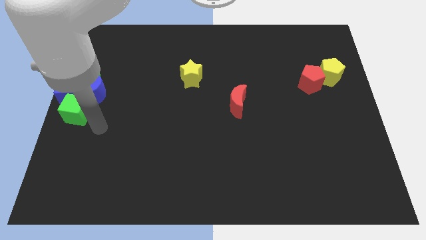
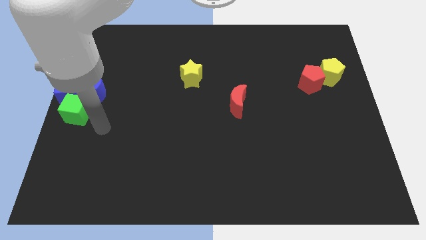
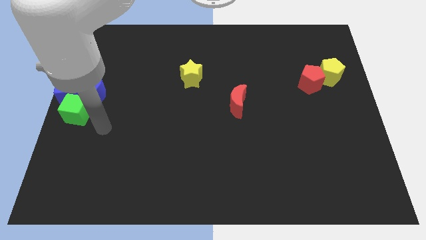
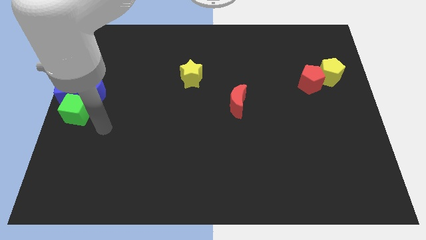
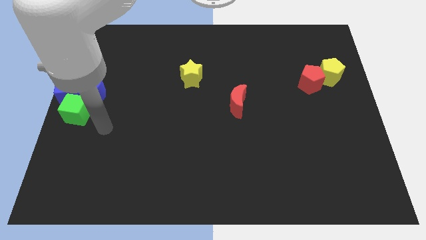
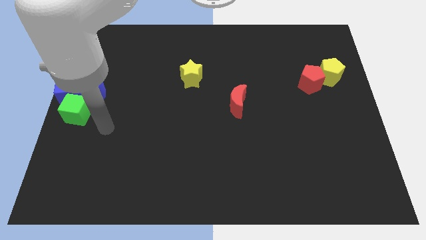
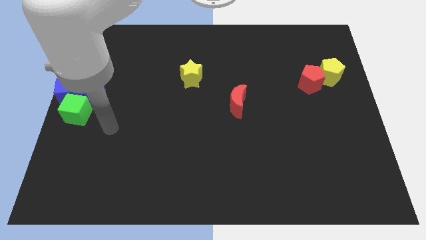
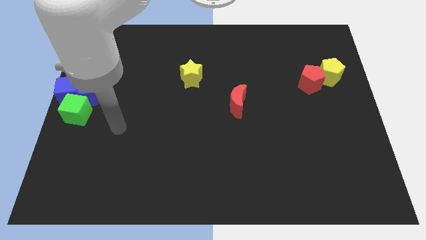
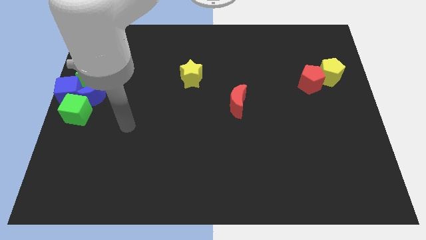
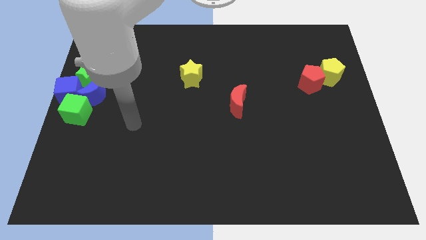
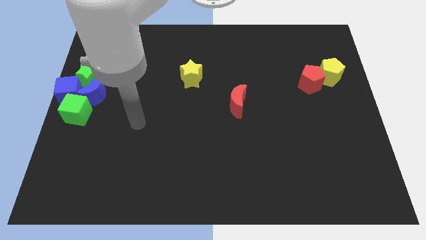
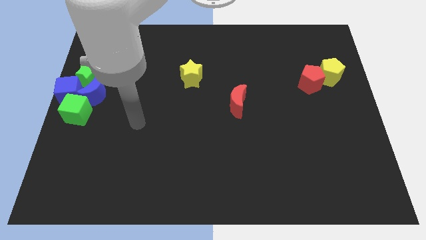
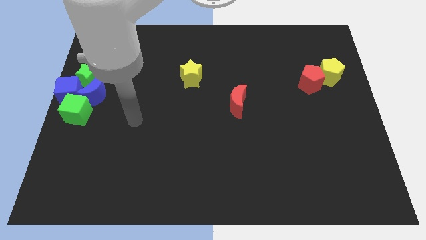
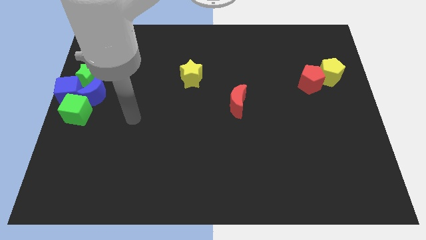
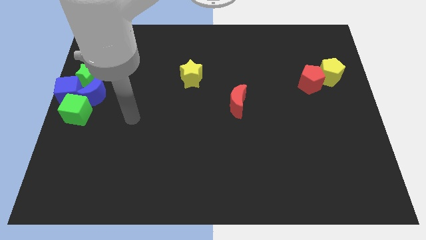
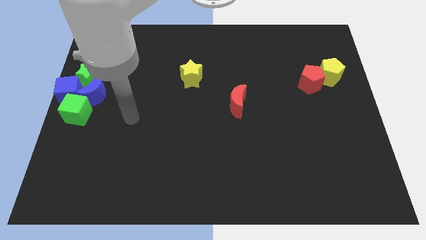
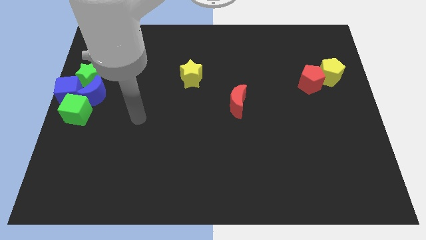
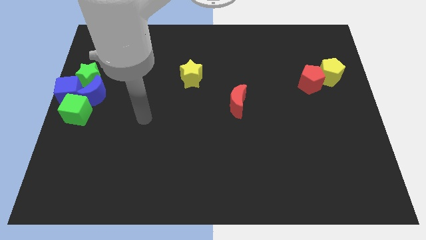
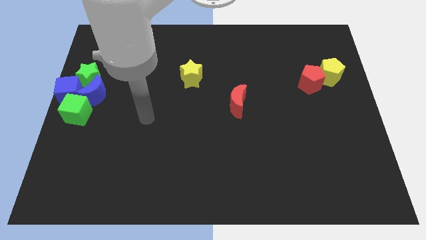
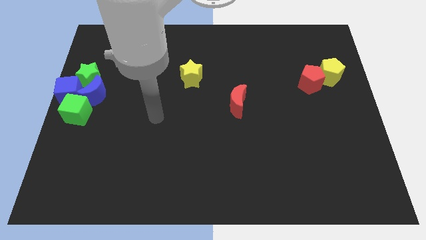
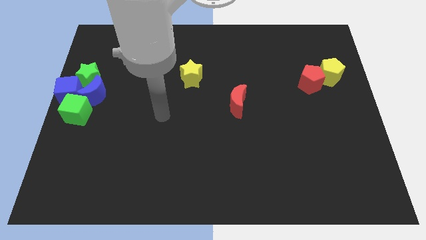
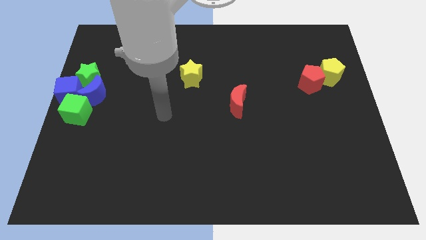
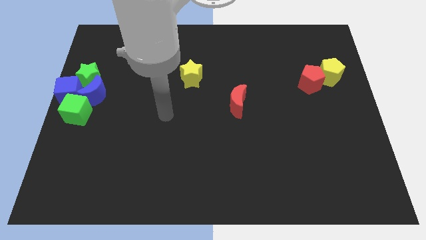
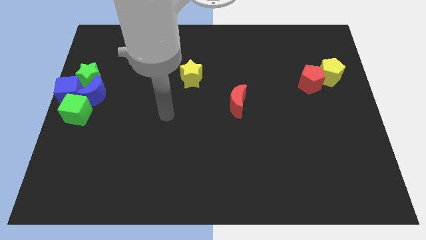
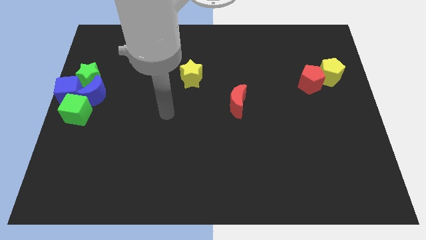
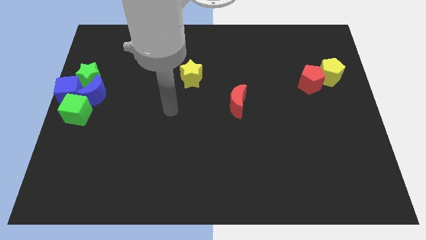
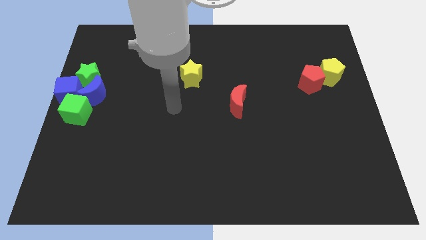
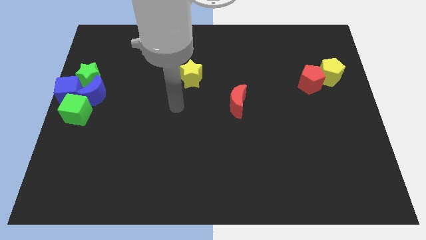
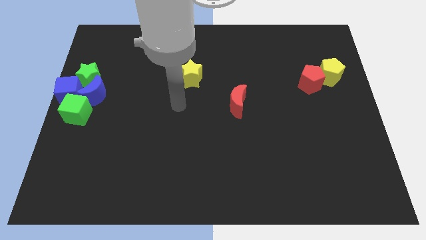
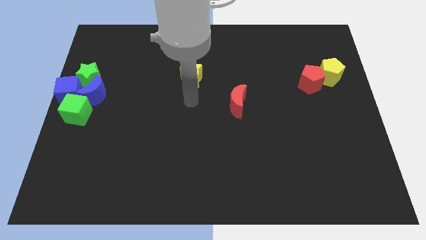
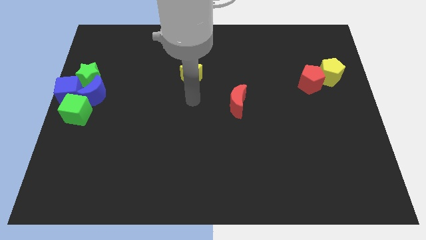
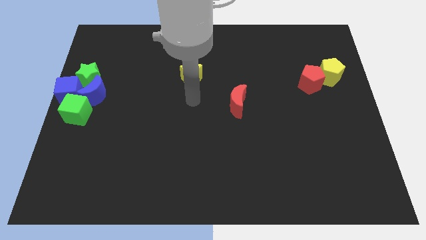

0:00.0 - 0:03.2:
move your arm towards yellow star

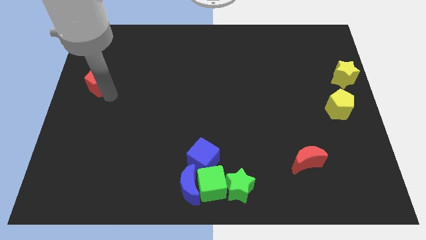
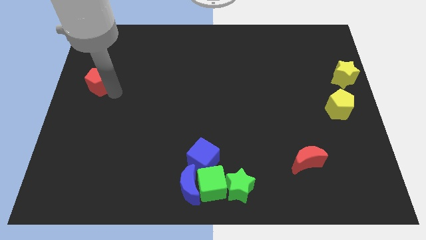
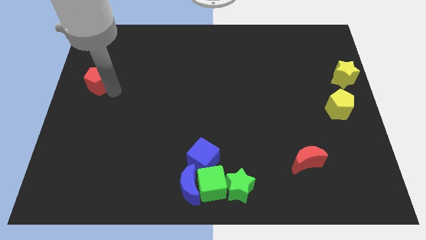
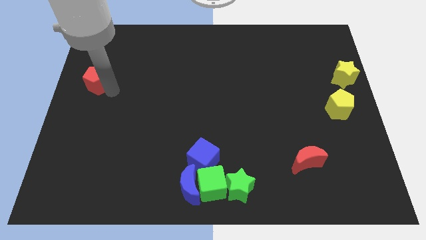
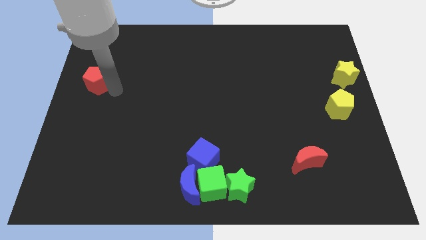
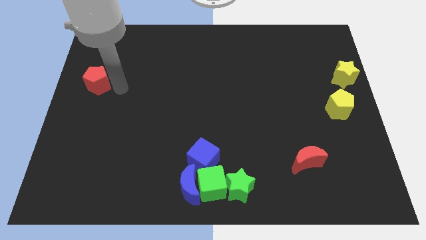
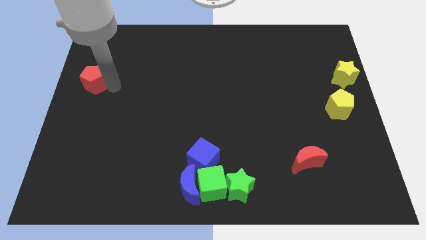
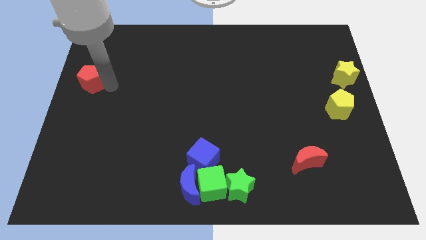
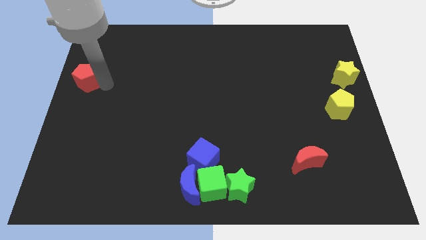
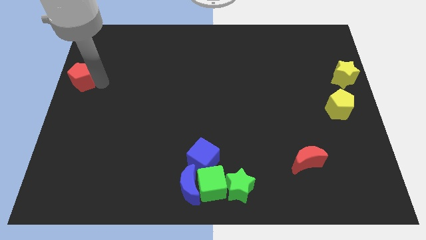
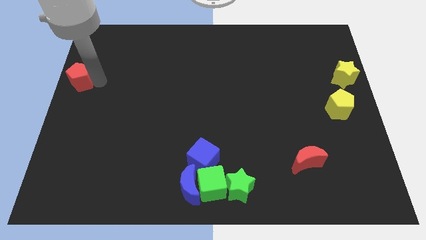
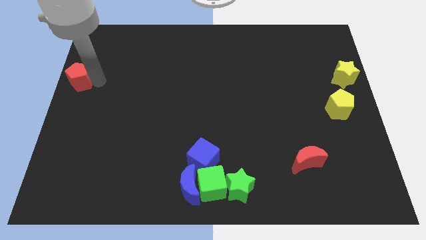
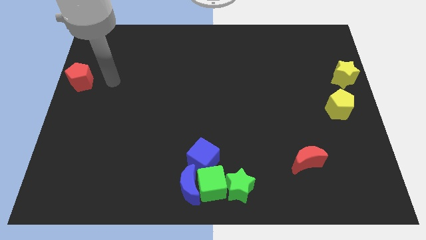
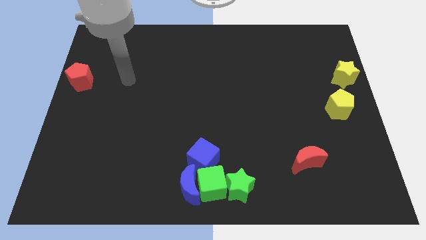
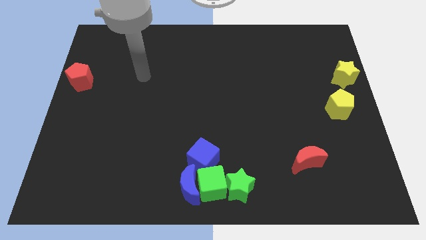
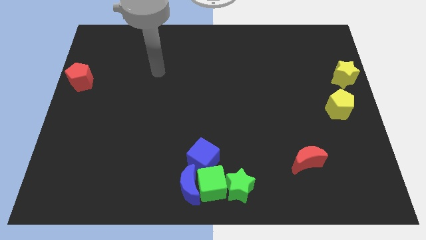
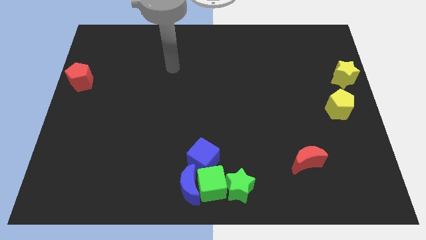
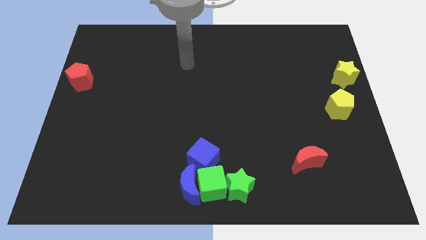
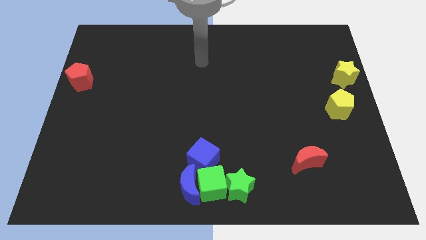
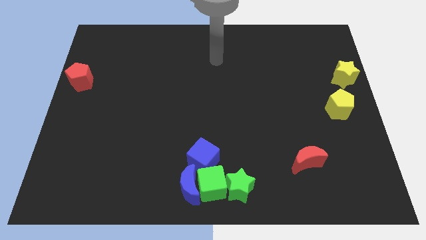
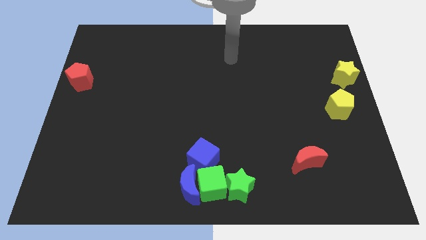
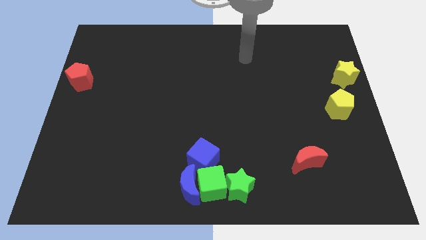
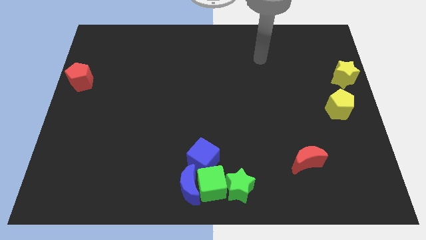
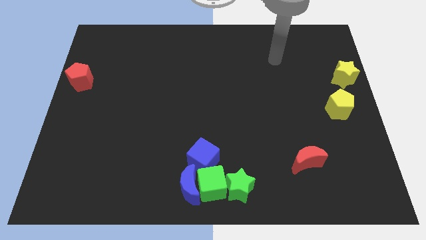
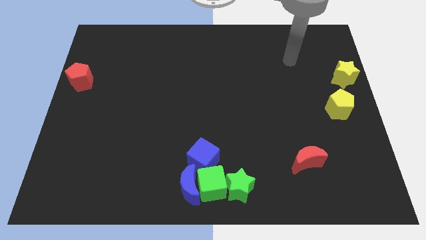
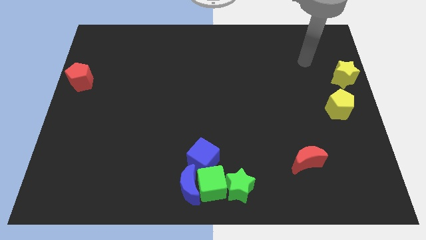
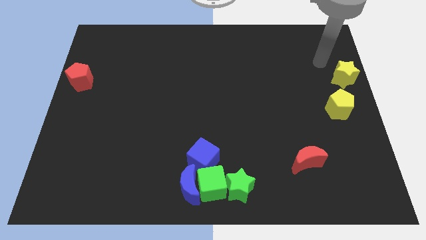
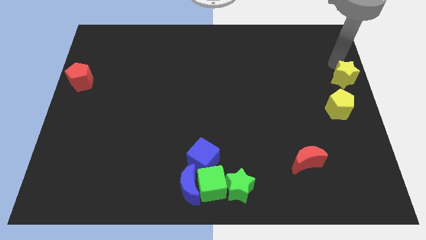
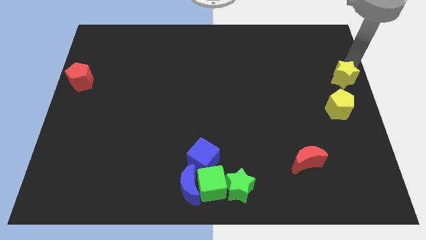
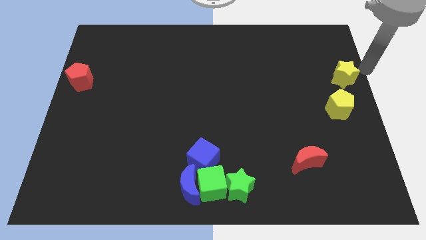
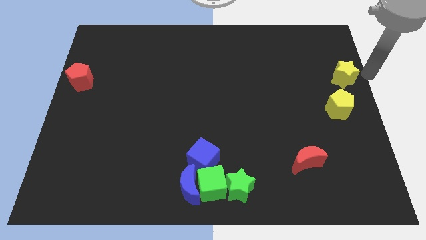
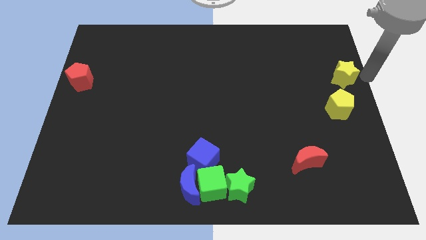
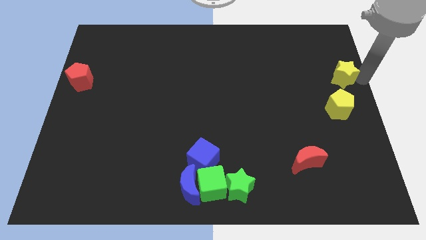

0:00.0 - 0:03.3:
place the red pentagon horizontally to the left side of the yellow star

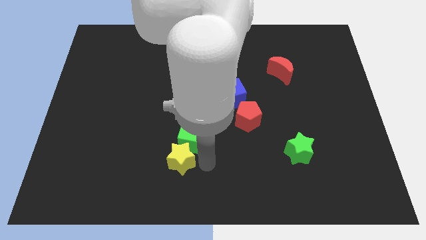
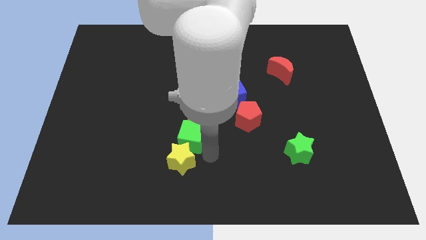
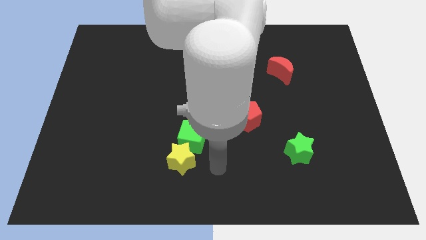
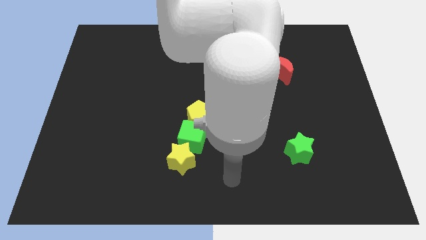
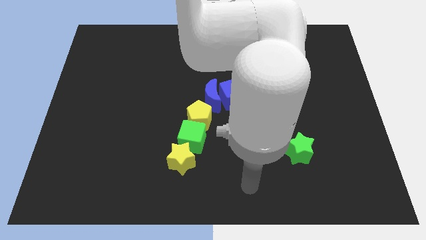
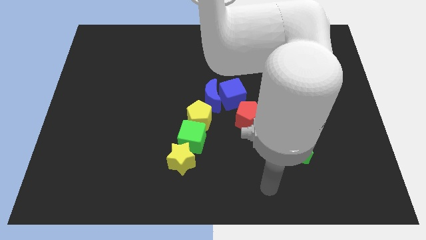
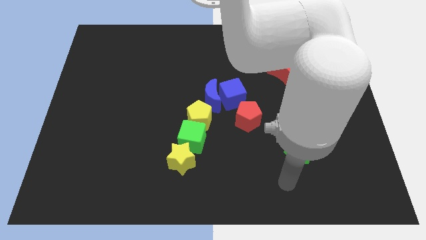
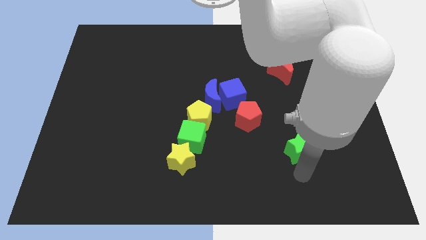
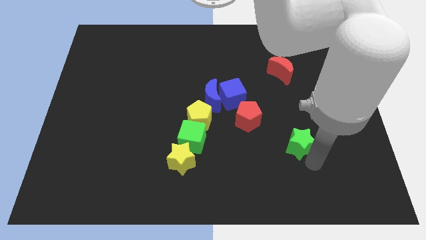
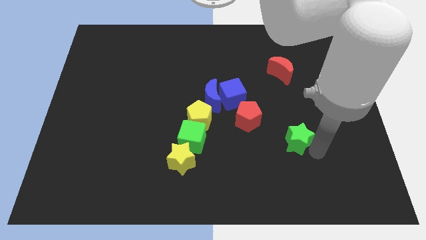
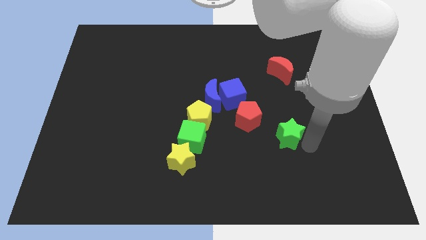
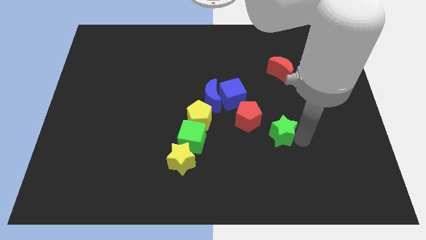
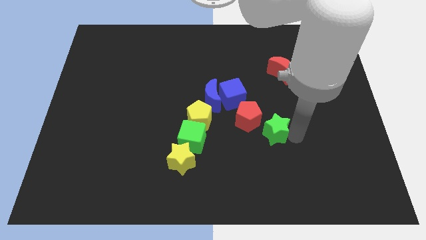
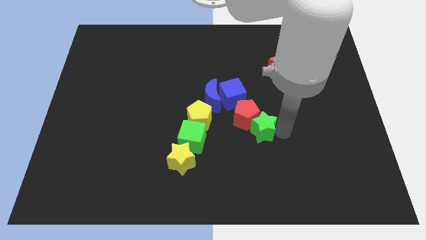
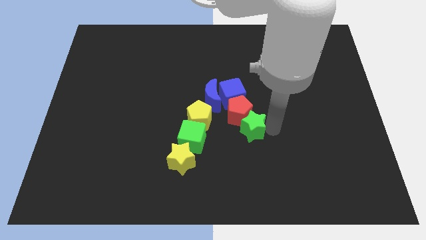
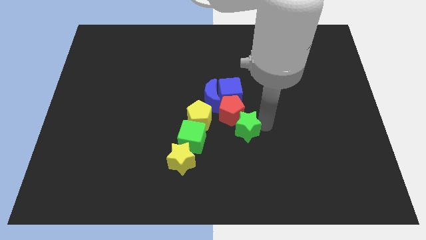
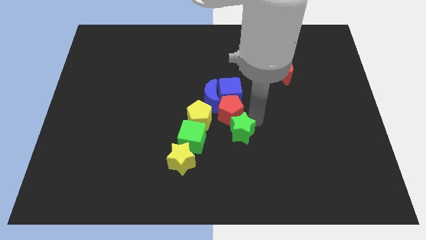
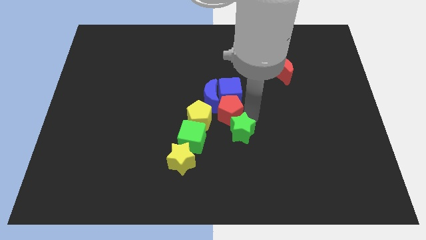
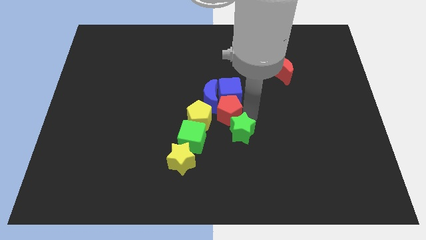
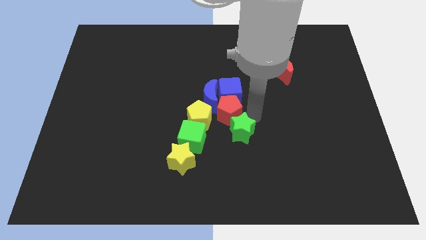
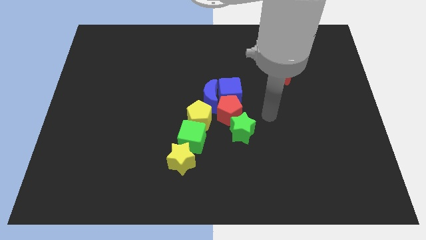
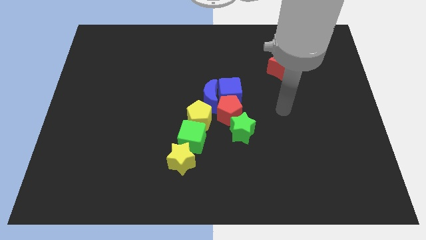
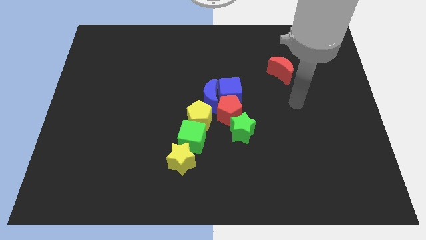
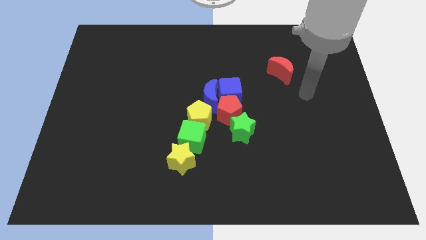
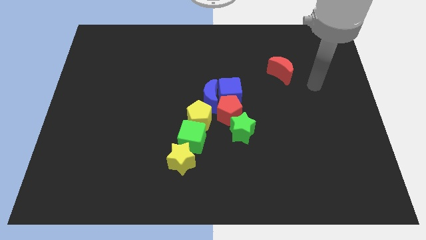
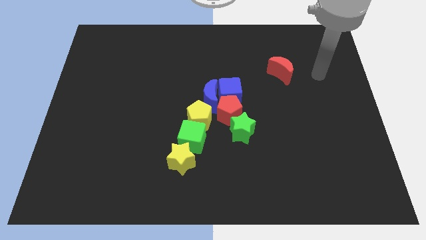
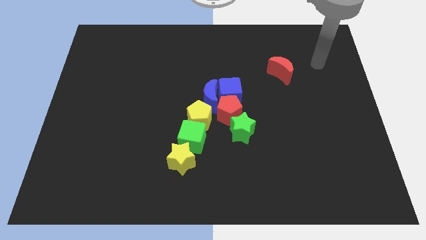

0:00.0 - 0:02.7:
move the green star into the red pentagon
